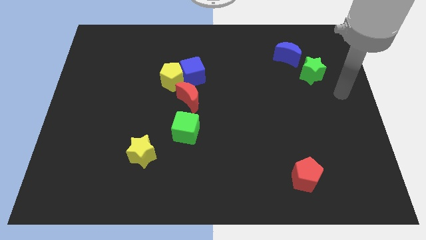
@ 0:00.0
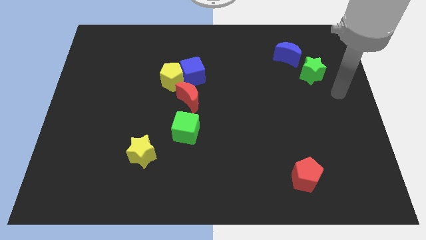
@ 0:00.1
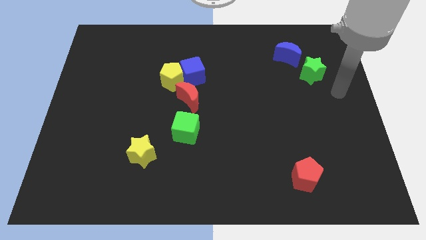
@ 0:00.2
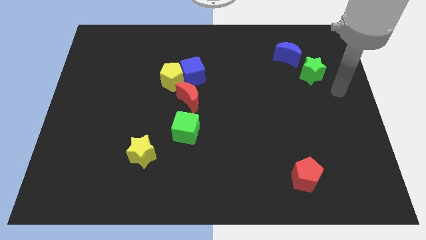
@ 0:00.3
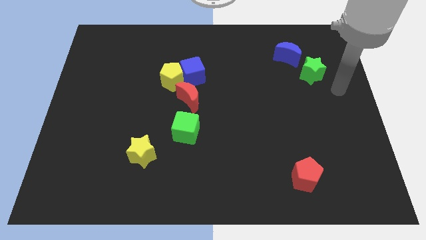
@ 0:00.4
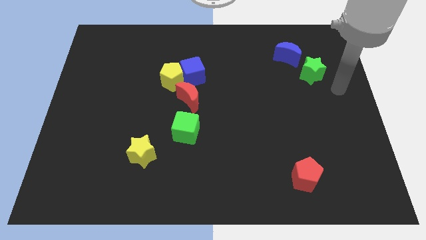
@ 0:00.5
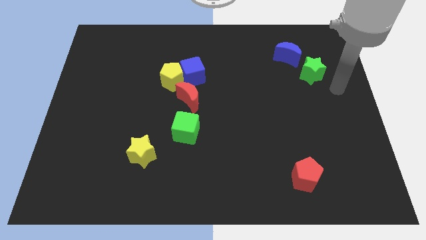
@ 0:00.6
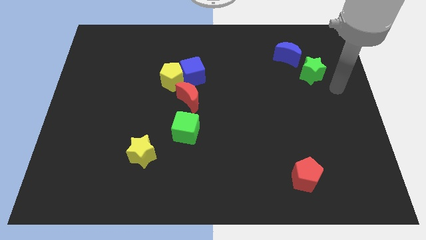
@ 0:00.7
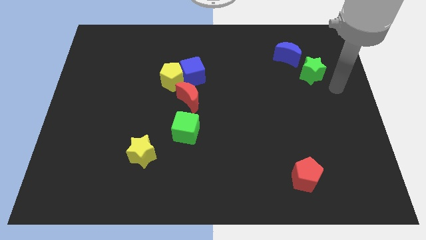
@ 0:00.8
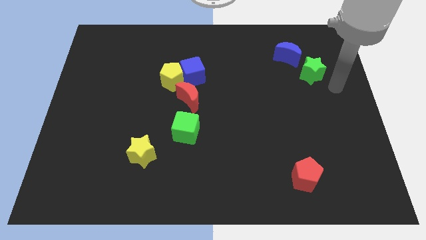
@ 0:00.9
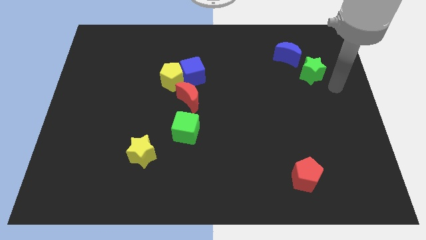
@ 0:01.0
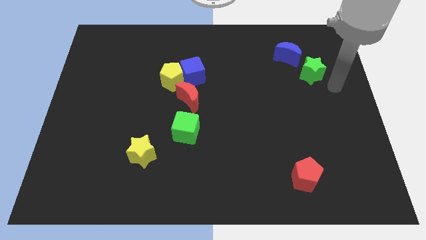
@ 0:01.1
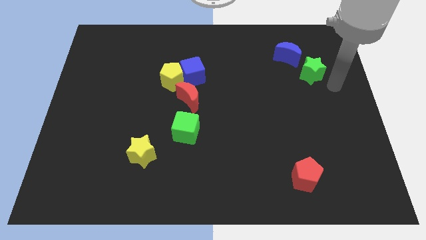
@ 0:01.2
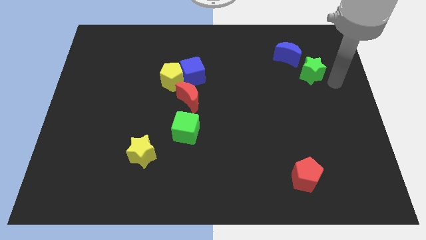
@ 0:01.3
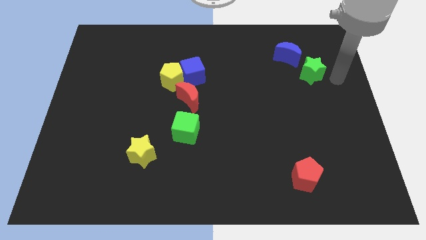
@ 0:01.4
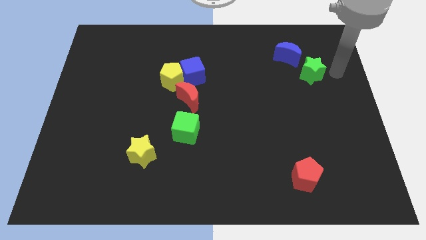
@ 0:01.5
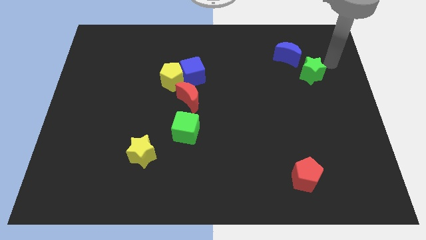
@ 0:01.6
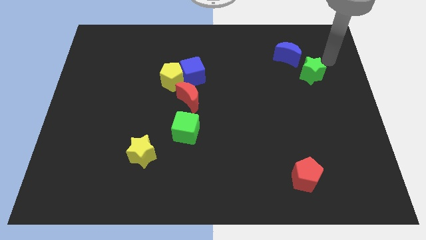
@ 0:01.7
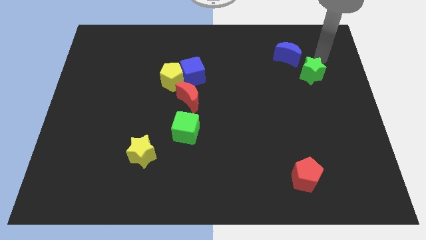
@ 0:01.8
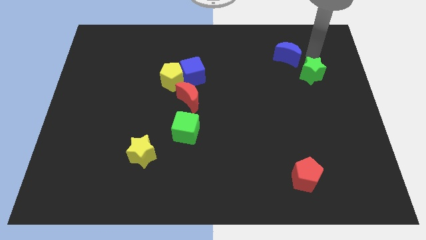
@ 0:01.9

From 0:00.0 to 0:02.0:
move your arm and point between green star and blue moon

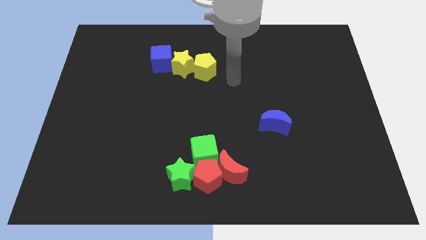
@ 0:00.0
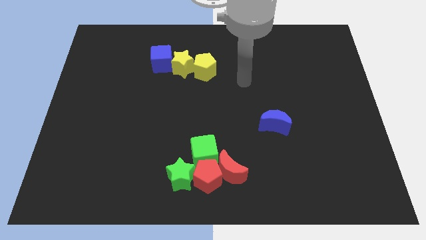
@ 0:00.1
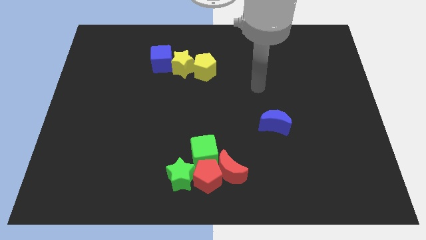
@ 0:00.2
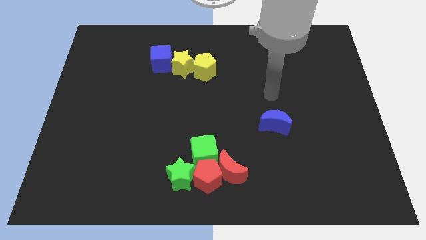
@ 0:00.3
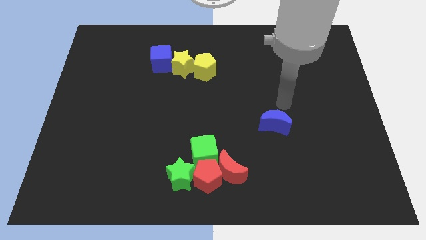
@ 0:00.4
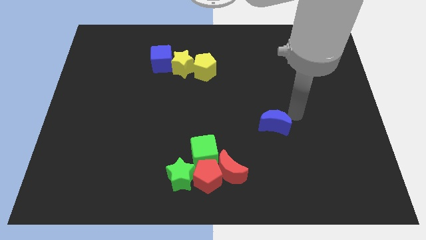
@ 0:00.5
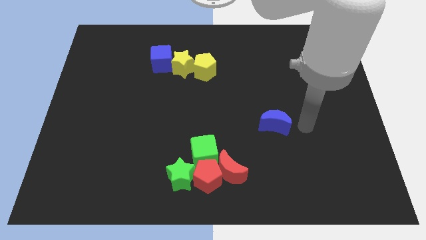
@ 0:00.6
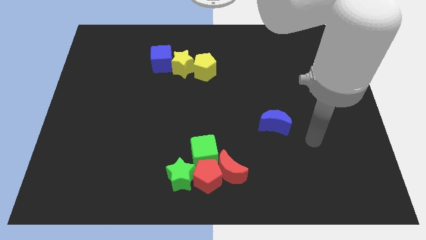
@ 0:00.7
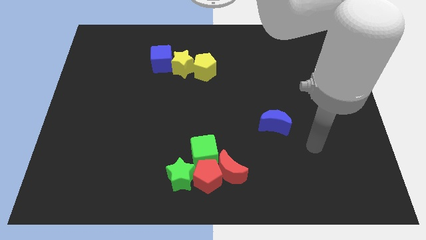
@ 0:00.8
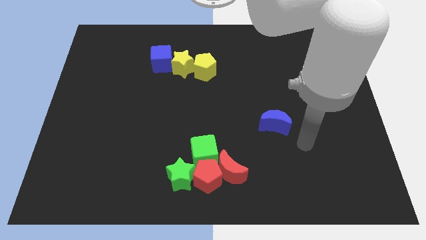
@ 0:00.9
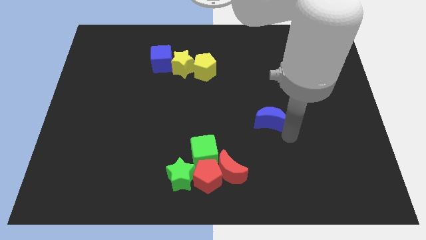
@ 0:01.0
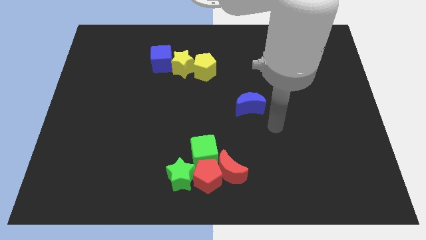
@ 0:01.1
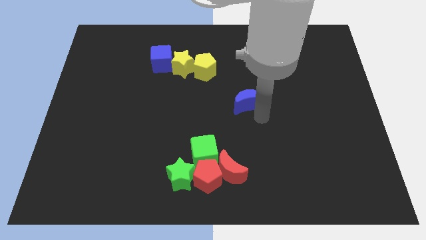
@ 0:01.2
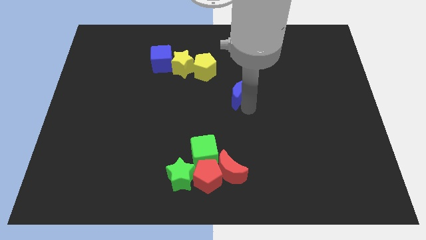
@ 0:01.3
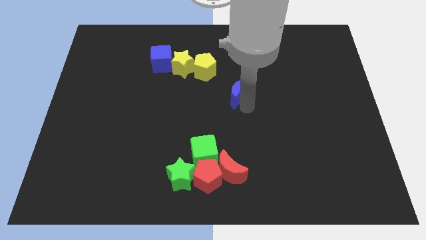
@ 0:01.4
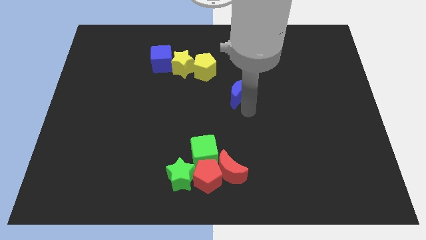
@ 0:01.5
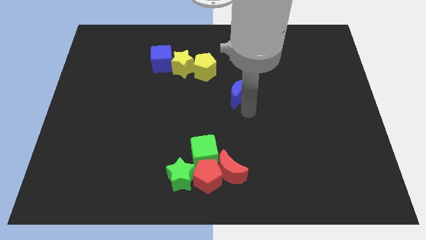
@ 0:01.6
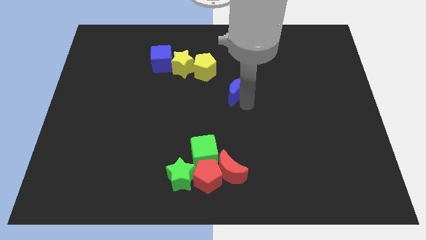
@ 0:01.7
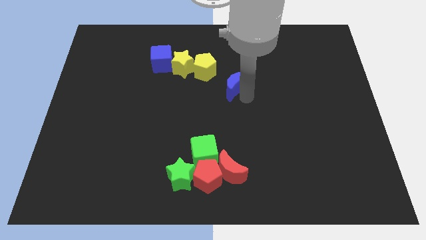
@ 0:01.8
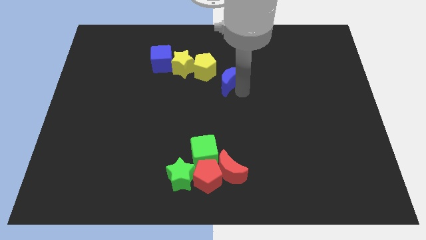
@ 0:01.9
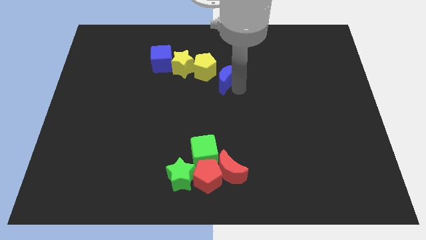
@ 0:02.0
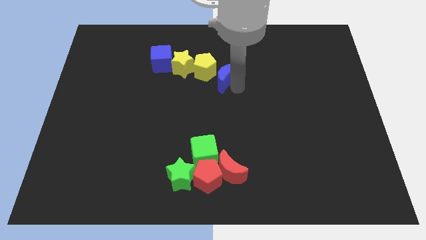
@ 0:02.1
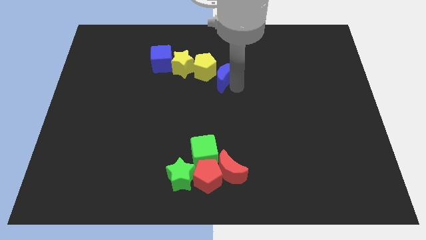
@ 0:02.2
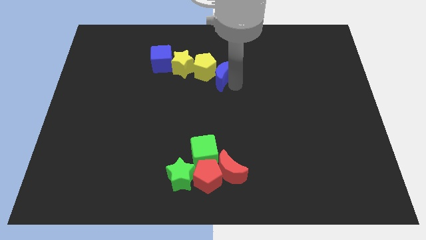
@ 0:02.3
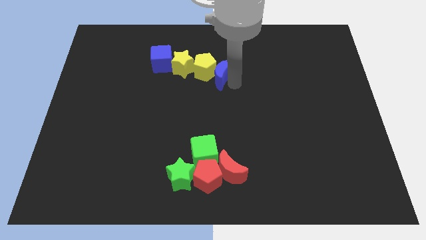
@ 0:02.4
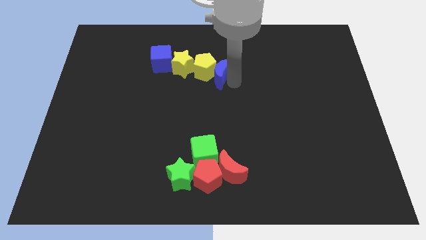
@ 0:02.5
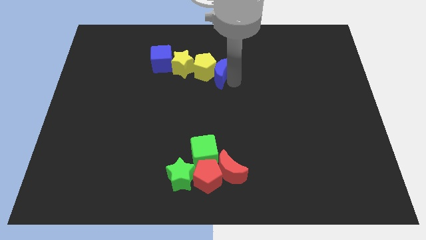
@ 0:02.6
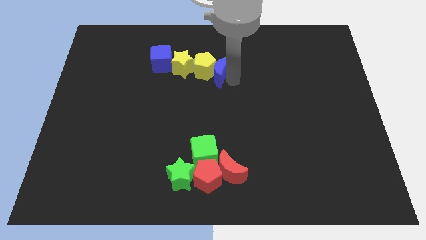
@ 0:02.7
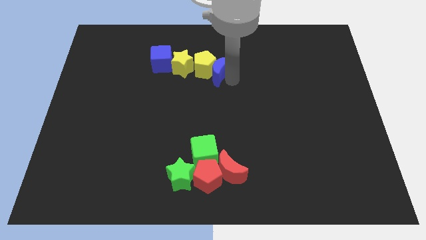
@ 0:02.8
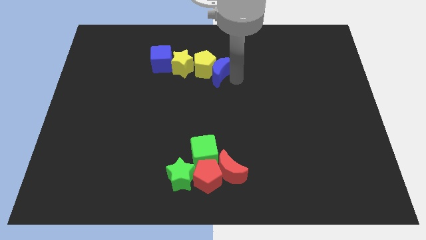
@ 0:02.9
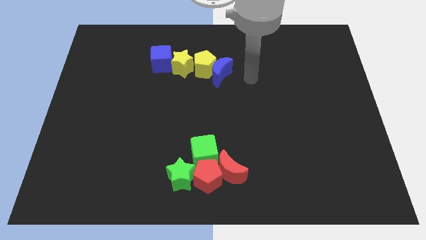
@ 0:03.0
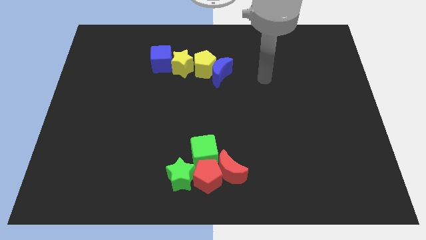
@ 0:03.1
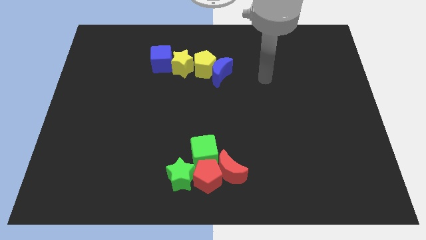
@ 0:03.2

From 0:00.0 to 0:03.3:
push the blue moon to the bottom right side of the yellow pentagon

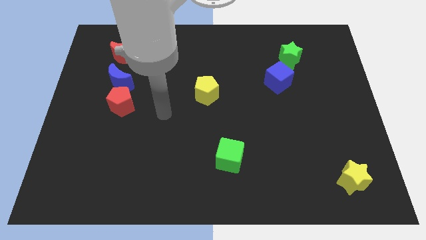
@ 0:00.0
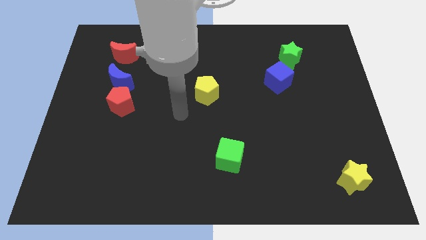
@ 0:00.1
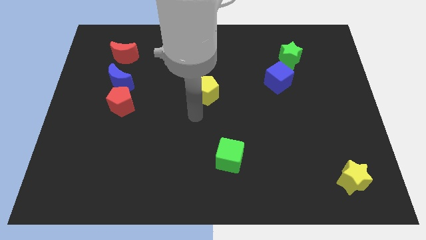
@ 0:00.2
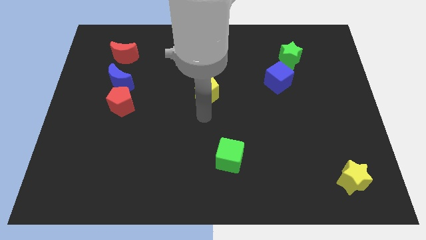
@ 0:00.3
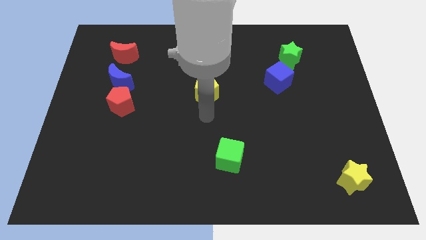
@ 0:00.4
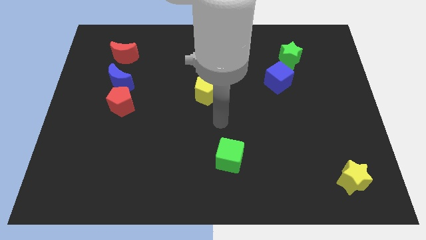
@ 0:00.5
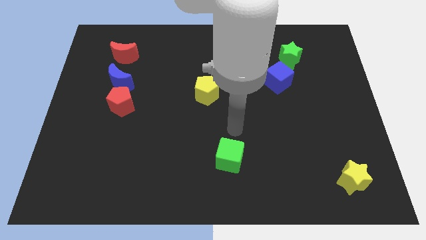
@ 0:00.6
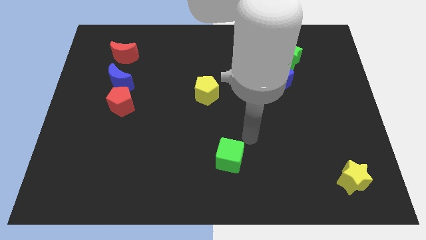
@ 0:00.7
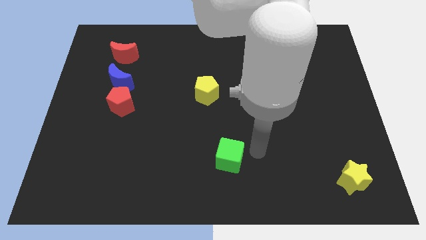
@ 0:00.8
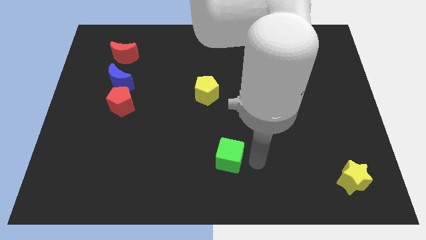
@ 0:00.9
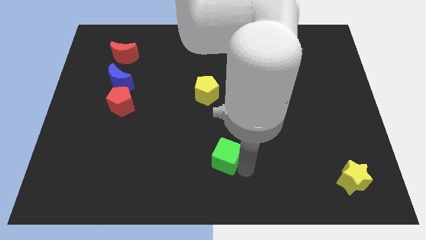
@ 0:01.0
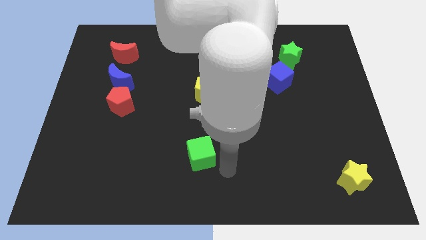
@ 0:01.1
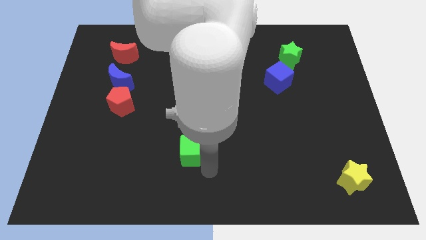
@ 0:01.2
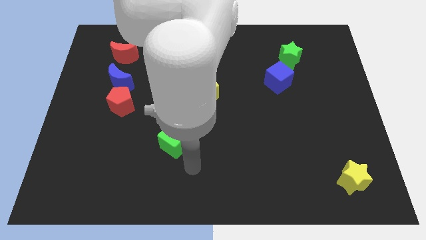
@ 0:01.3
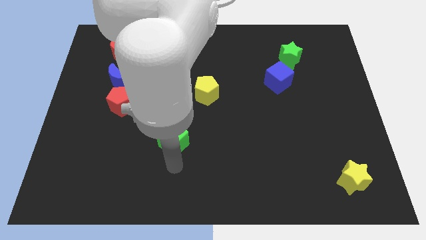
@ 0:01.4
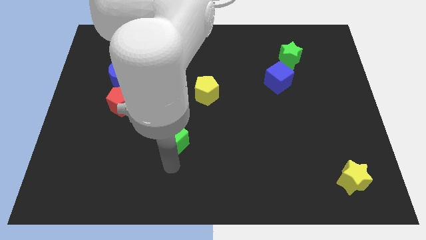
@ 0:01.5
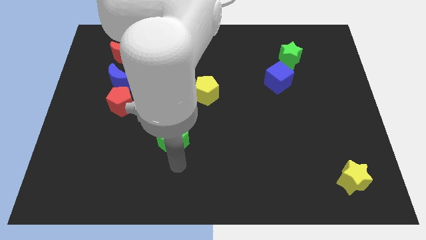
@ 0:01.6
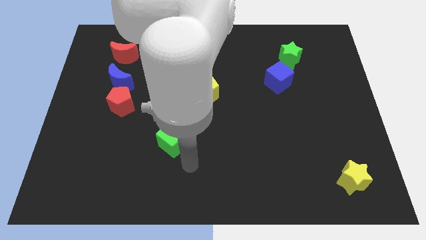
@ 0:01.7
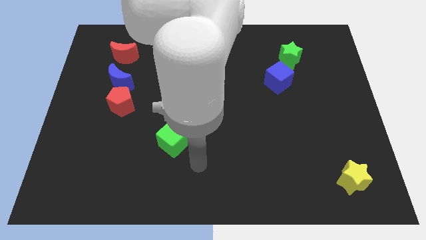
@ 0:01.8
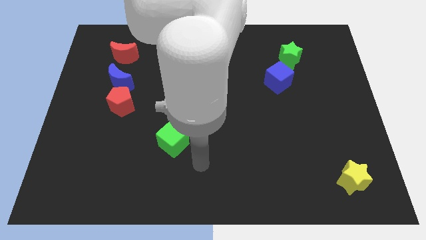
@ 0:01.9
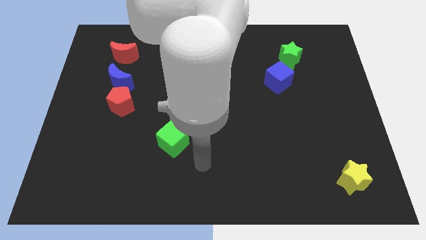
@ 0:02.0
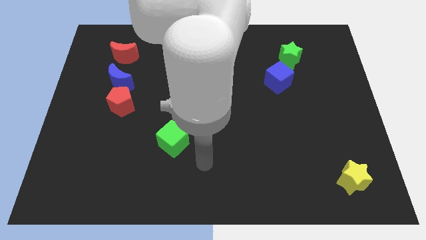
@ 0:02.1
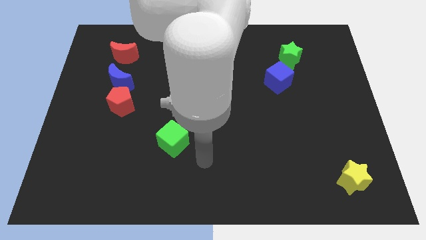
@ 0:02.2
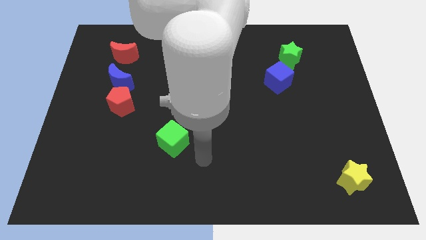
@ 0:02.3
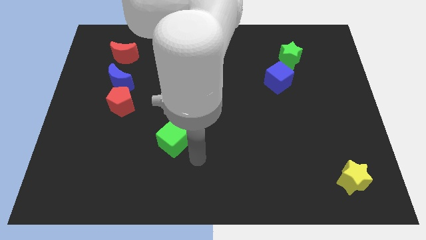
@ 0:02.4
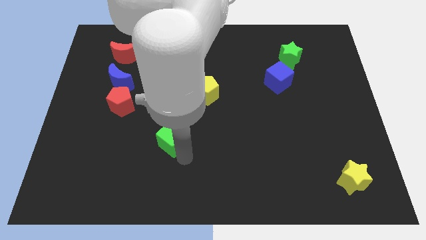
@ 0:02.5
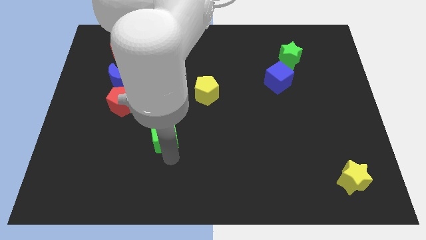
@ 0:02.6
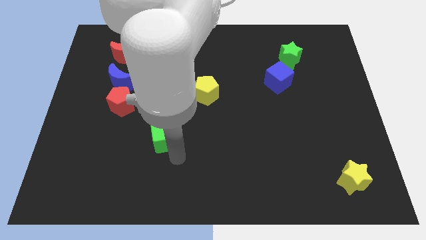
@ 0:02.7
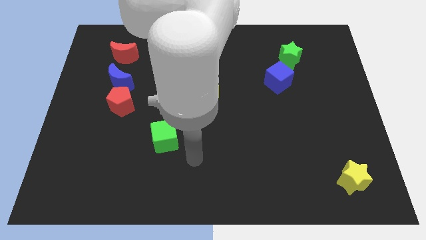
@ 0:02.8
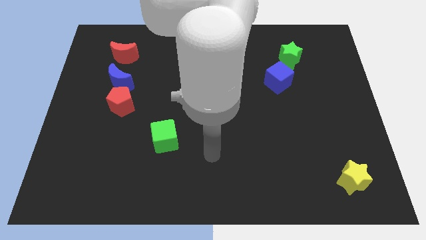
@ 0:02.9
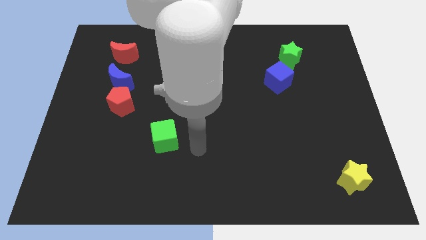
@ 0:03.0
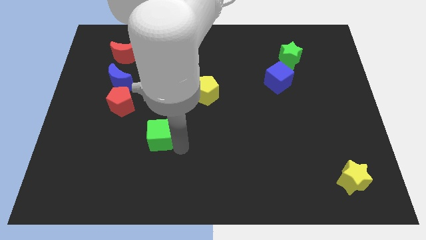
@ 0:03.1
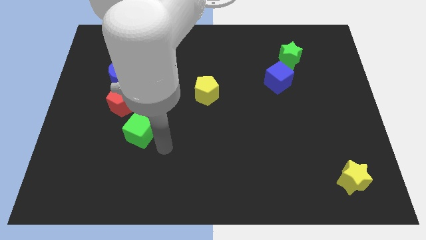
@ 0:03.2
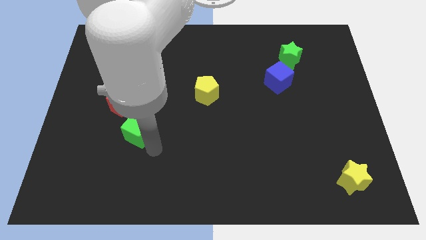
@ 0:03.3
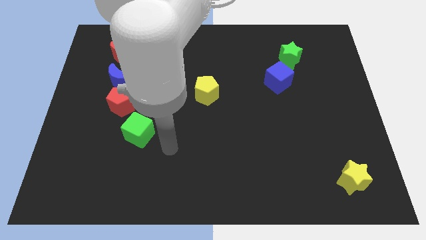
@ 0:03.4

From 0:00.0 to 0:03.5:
push the green cube towards the left side of the board
